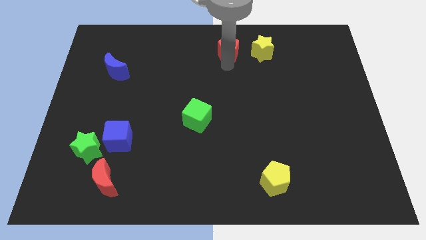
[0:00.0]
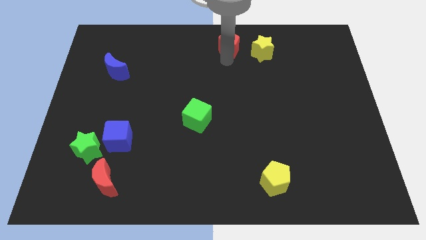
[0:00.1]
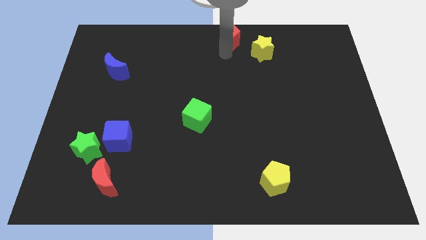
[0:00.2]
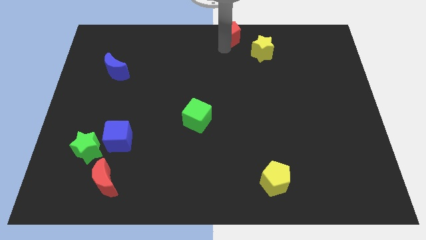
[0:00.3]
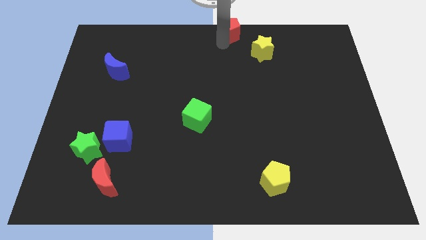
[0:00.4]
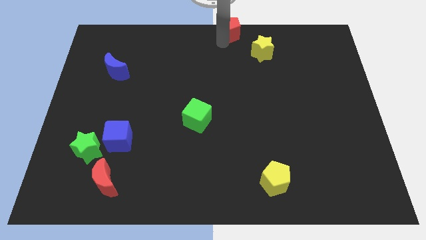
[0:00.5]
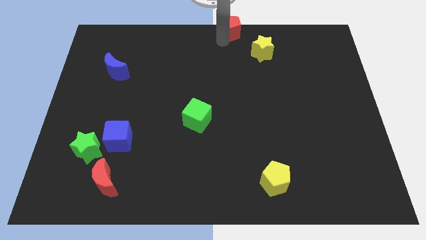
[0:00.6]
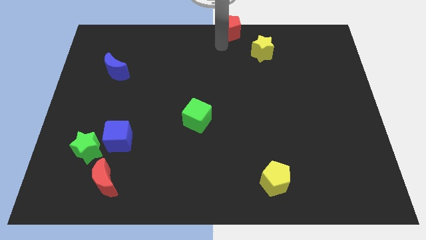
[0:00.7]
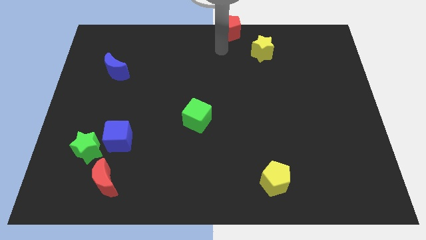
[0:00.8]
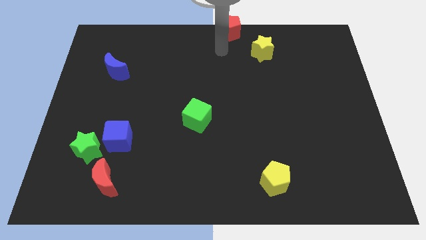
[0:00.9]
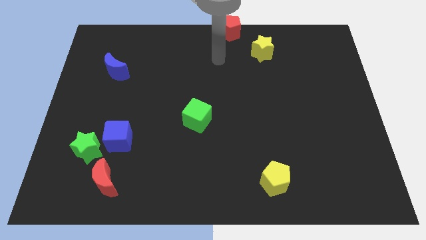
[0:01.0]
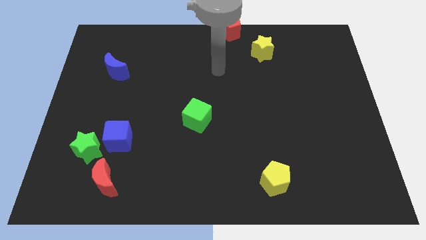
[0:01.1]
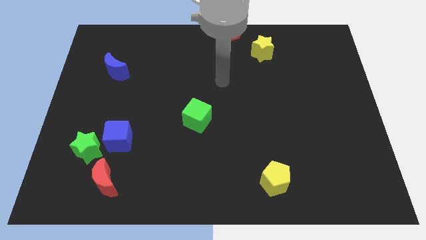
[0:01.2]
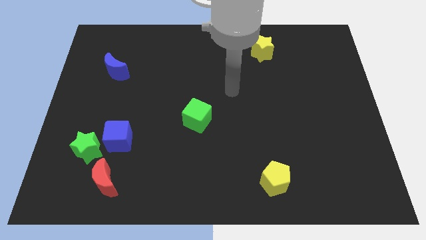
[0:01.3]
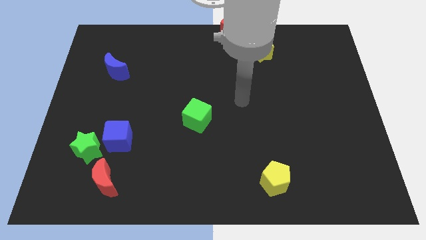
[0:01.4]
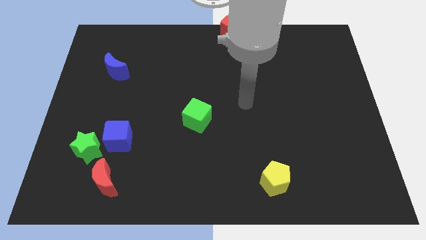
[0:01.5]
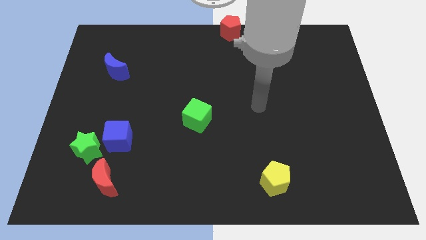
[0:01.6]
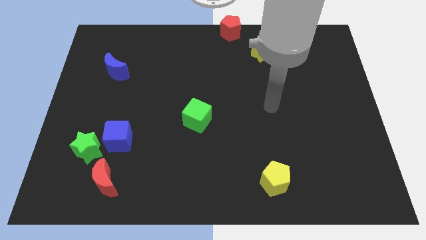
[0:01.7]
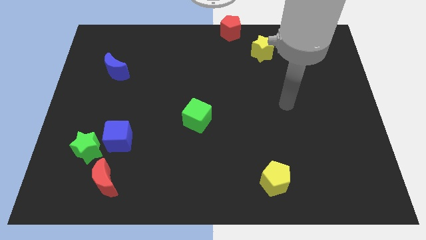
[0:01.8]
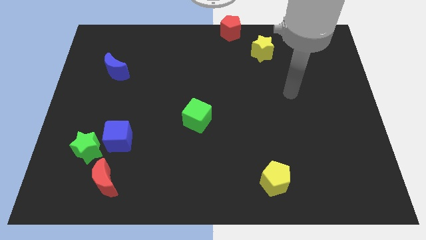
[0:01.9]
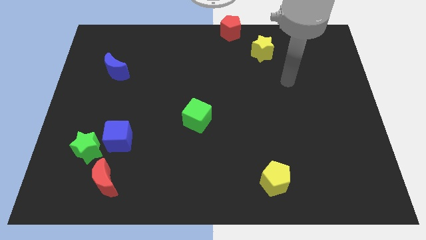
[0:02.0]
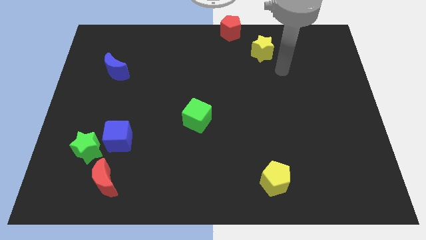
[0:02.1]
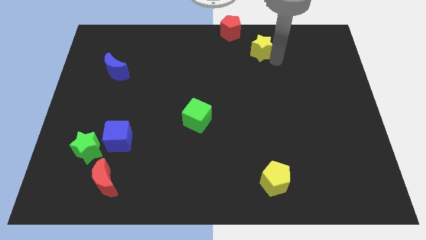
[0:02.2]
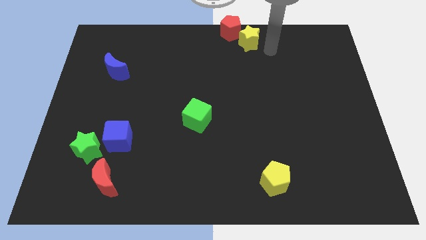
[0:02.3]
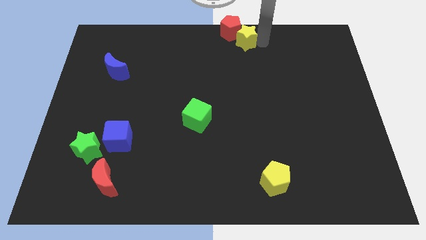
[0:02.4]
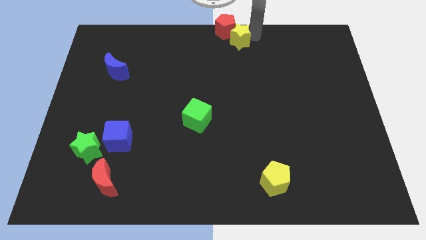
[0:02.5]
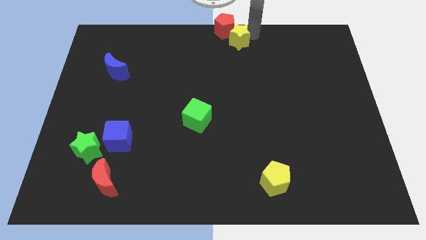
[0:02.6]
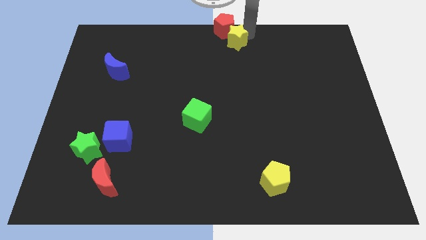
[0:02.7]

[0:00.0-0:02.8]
push the yellow star into the red pentagon

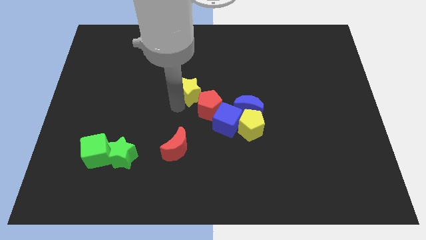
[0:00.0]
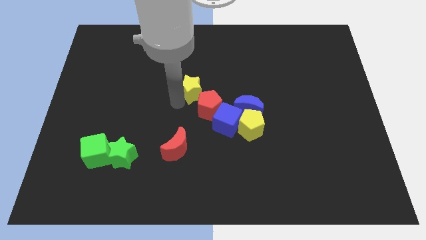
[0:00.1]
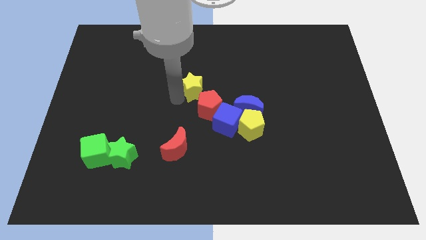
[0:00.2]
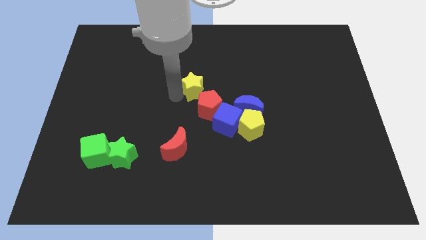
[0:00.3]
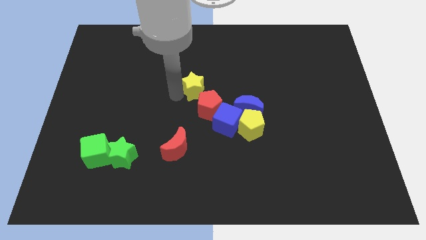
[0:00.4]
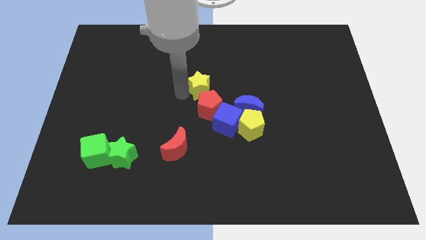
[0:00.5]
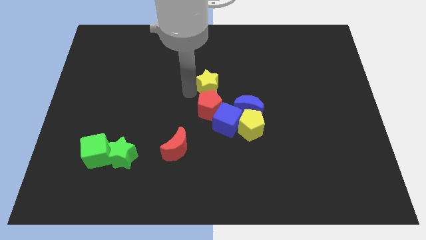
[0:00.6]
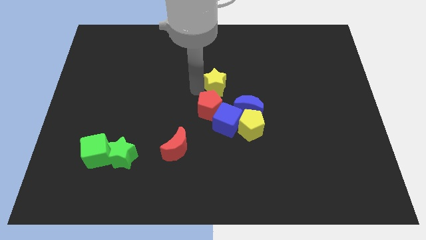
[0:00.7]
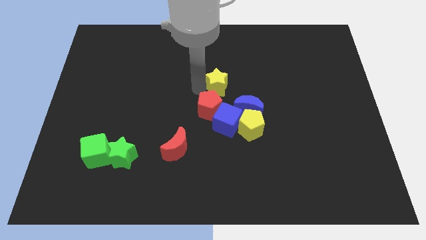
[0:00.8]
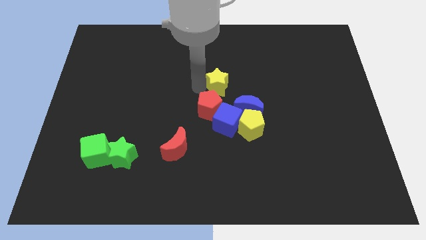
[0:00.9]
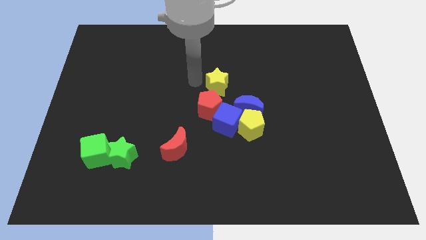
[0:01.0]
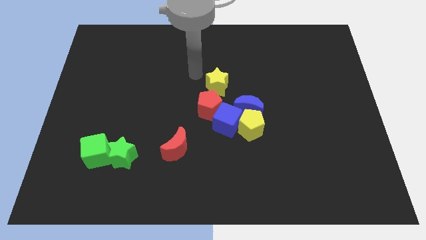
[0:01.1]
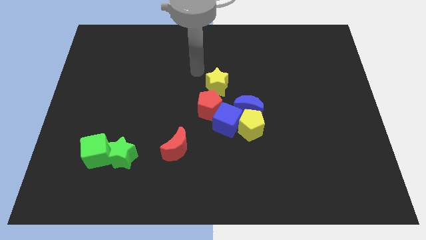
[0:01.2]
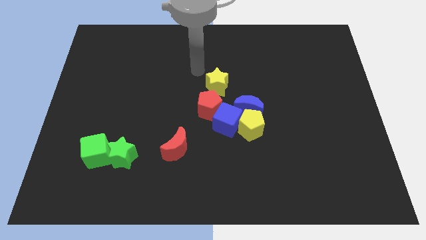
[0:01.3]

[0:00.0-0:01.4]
place the yellow star above the red pentagon

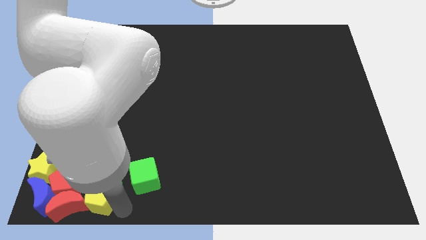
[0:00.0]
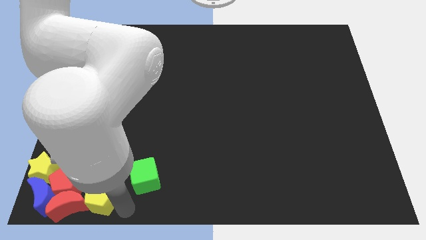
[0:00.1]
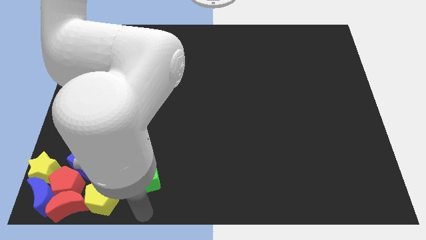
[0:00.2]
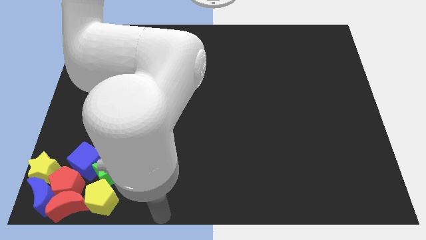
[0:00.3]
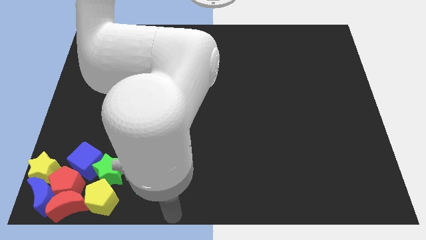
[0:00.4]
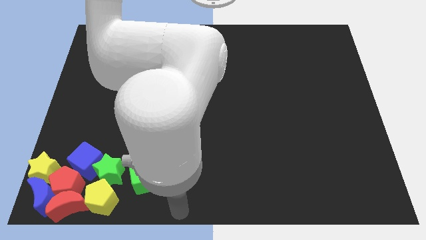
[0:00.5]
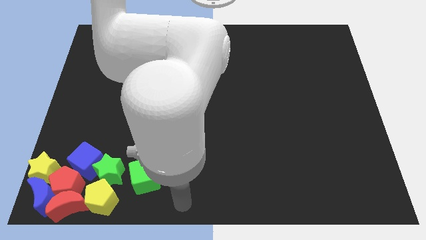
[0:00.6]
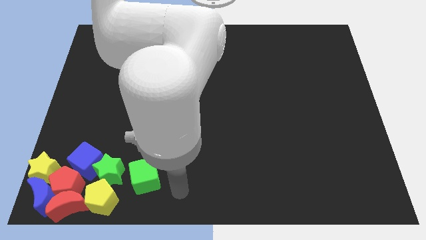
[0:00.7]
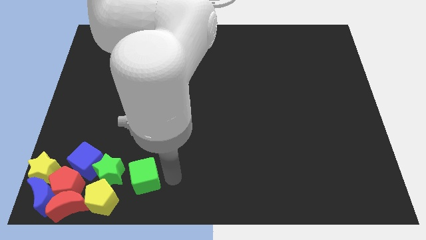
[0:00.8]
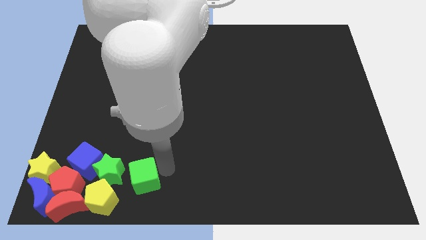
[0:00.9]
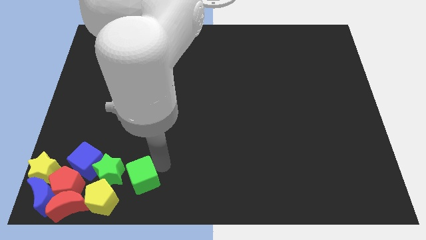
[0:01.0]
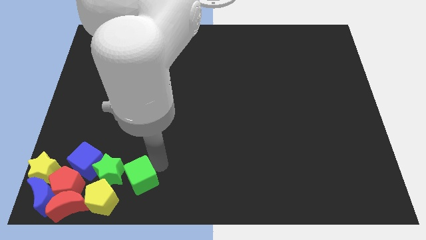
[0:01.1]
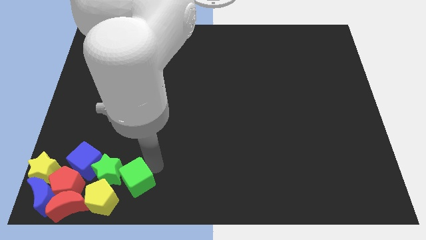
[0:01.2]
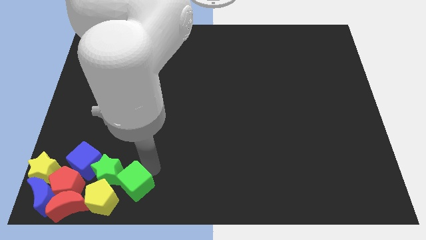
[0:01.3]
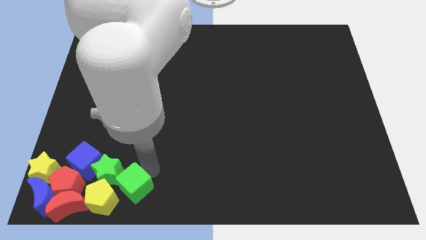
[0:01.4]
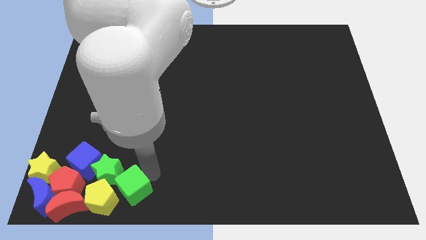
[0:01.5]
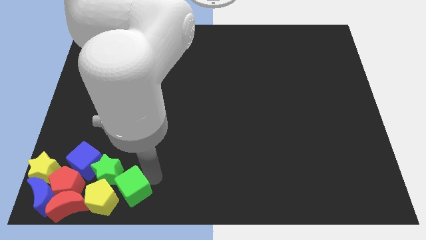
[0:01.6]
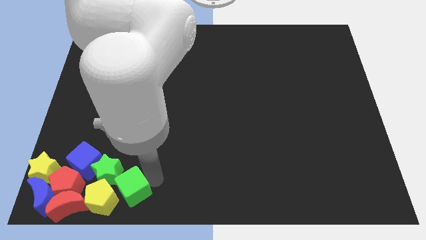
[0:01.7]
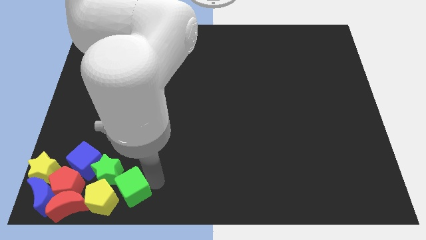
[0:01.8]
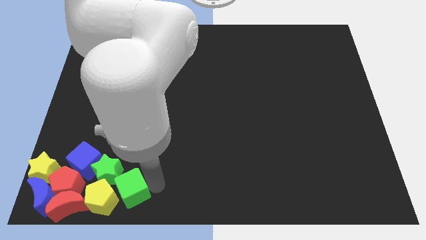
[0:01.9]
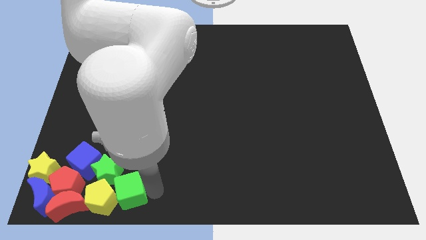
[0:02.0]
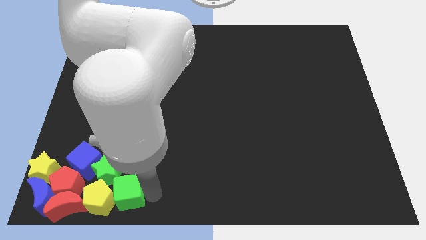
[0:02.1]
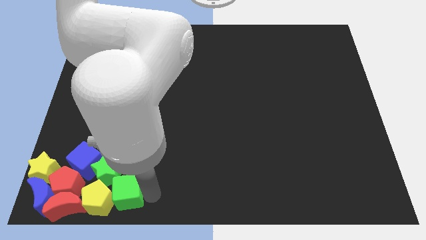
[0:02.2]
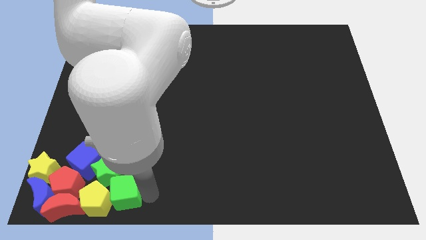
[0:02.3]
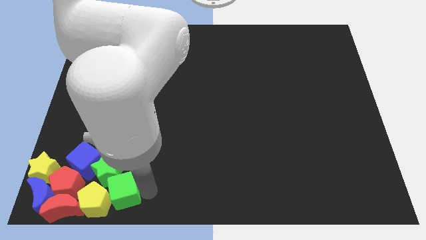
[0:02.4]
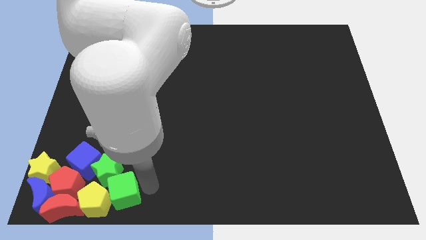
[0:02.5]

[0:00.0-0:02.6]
push the green cube into the yellow pentagon

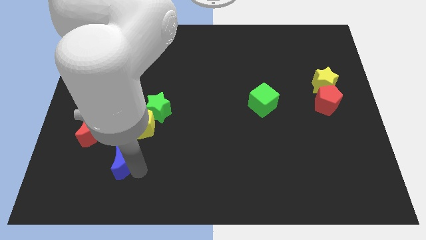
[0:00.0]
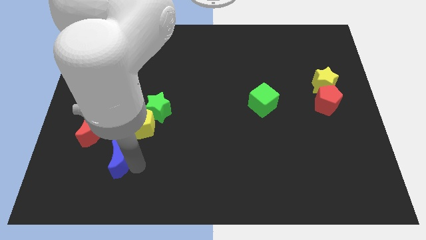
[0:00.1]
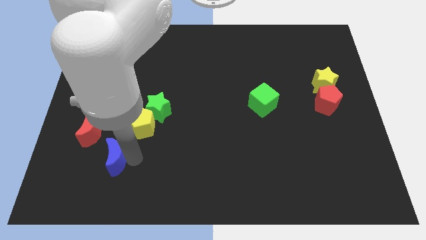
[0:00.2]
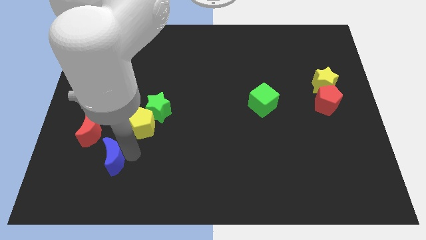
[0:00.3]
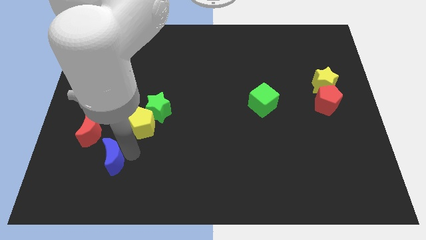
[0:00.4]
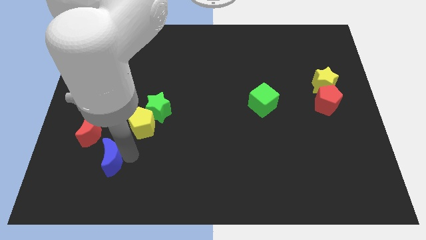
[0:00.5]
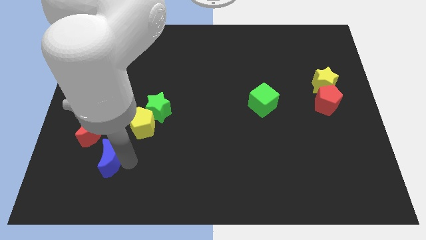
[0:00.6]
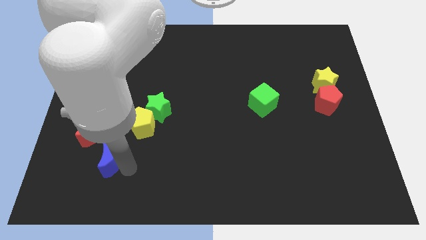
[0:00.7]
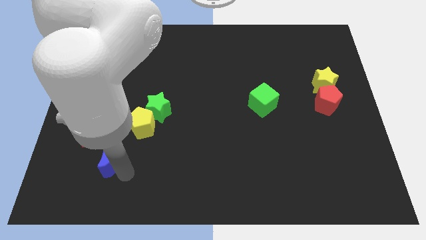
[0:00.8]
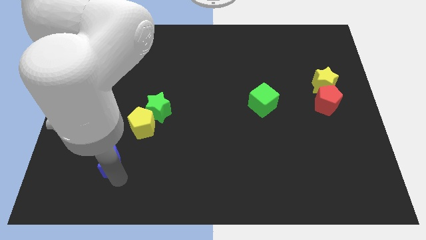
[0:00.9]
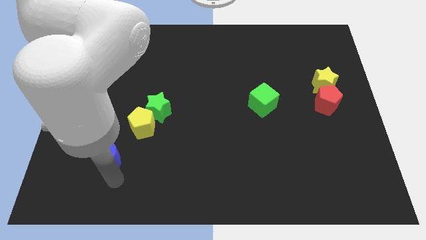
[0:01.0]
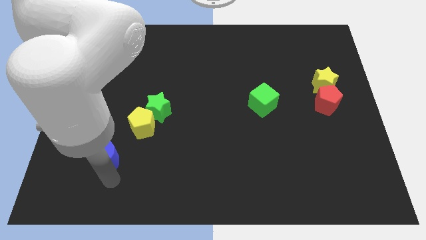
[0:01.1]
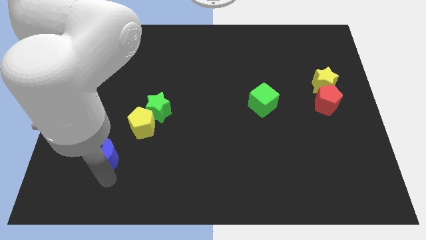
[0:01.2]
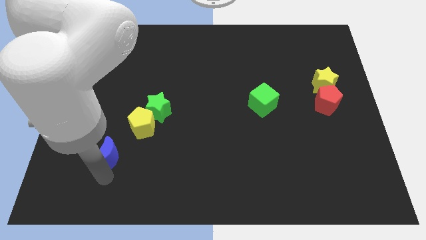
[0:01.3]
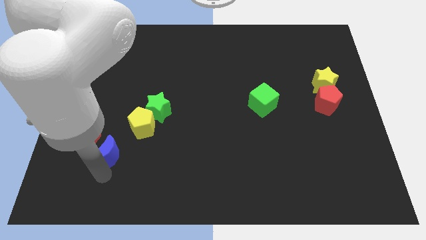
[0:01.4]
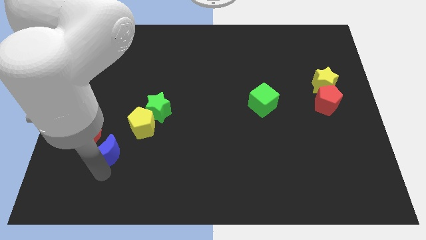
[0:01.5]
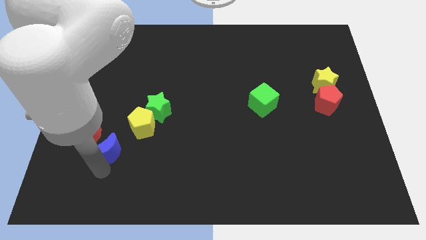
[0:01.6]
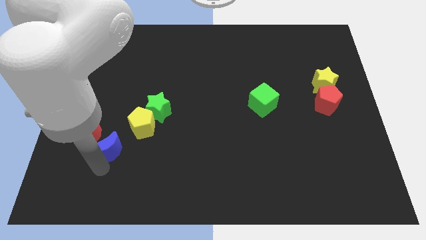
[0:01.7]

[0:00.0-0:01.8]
move the blue moon slightly to the top

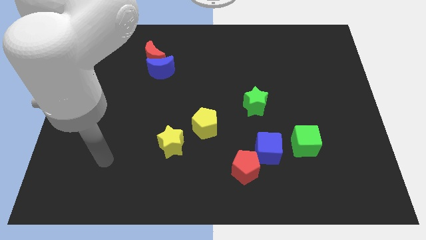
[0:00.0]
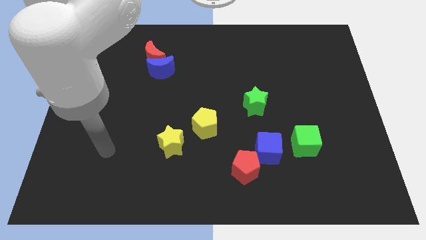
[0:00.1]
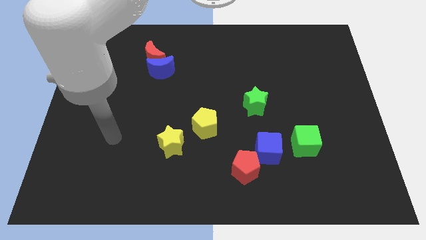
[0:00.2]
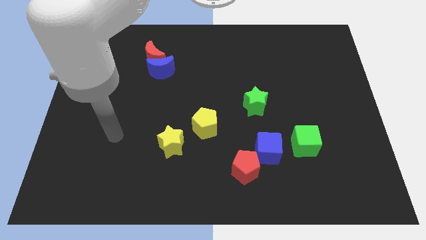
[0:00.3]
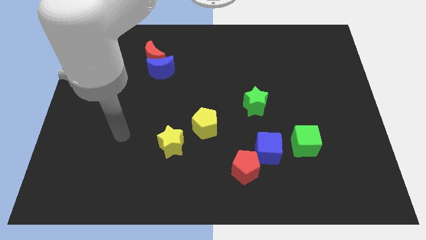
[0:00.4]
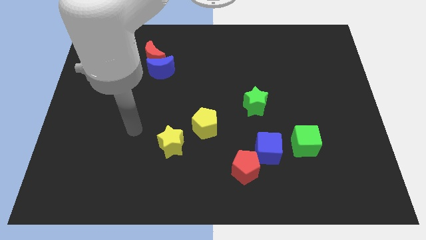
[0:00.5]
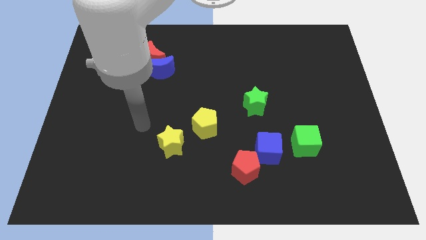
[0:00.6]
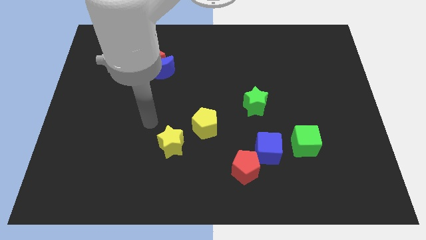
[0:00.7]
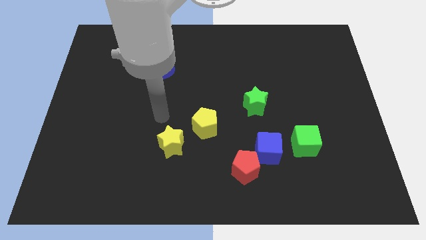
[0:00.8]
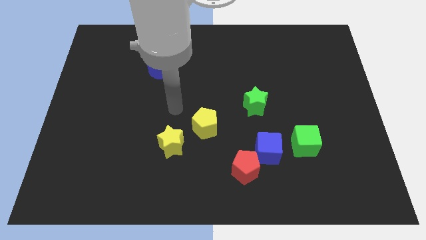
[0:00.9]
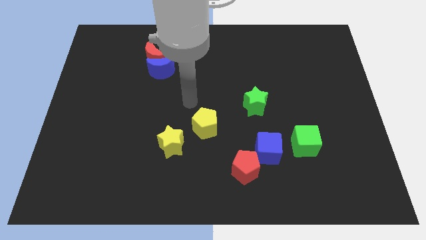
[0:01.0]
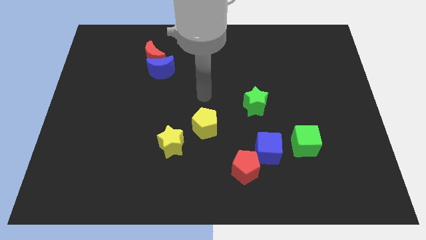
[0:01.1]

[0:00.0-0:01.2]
point your hand above the yellow pentagon
